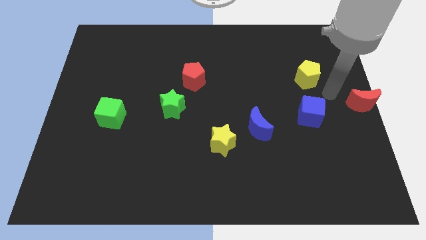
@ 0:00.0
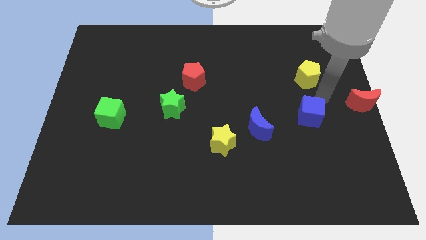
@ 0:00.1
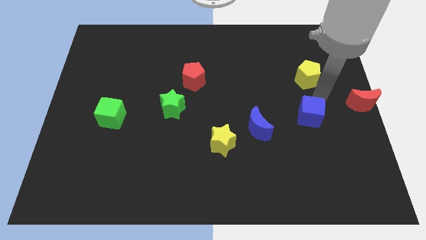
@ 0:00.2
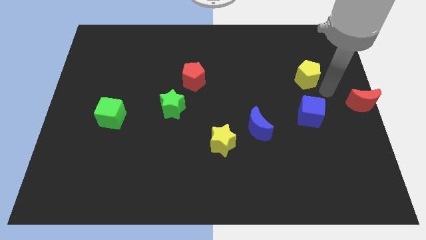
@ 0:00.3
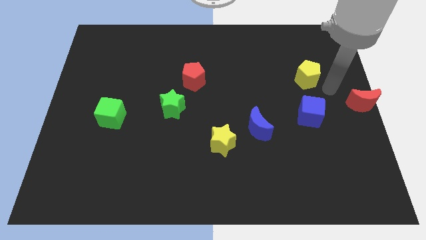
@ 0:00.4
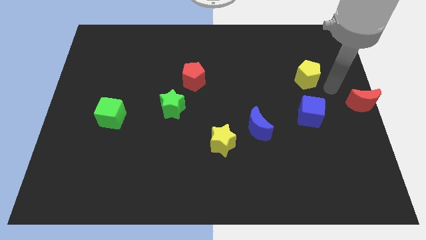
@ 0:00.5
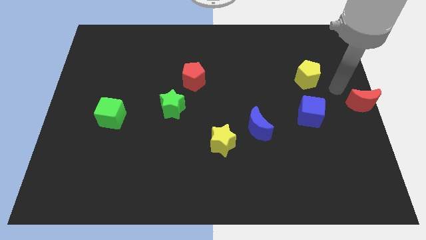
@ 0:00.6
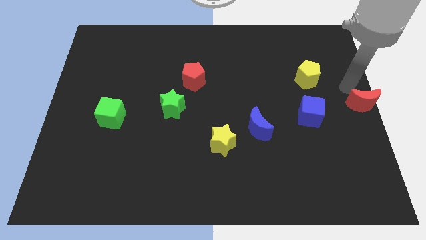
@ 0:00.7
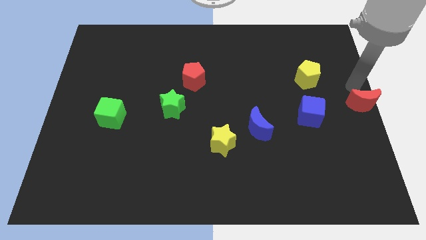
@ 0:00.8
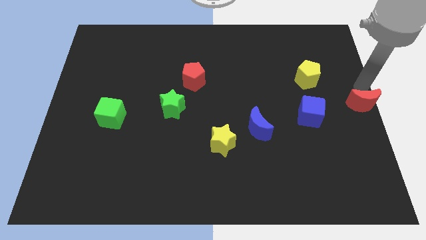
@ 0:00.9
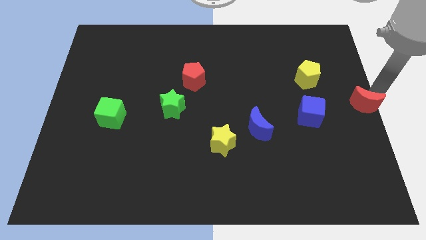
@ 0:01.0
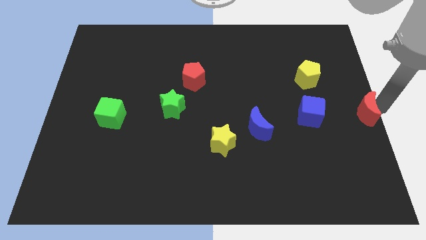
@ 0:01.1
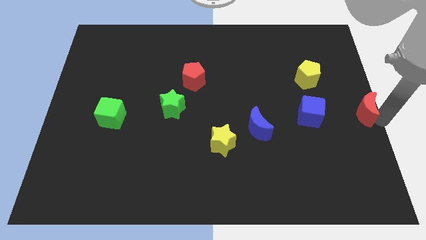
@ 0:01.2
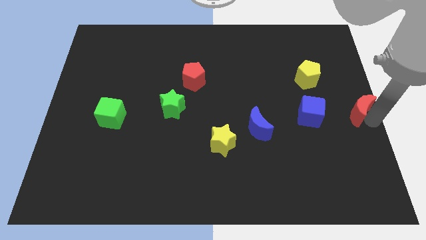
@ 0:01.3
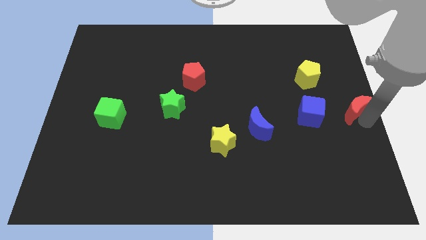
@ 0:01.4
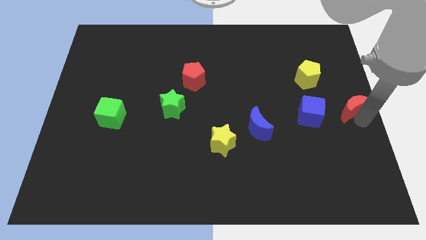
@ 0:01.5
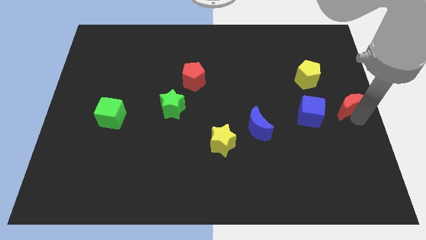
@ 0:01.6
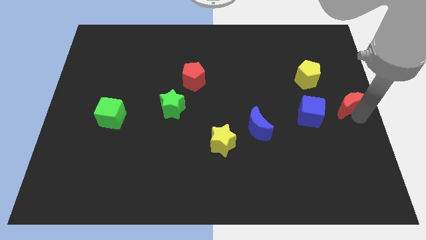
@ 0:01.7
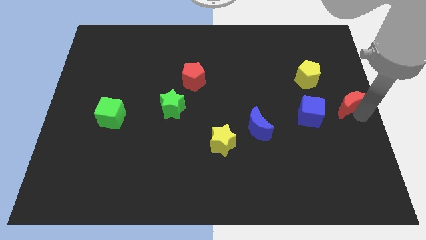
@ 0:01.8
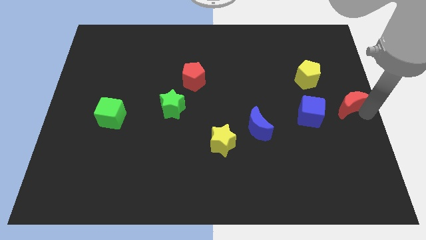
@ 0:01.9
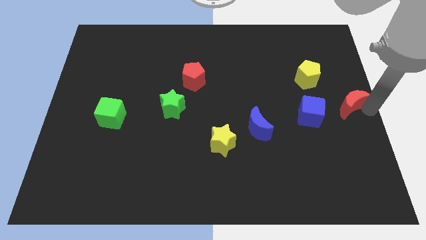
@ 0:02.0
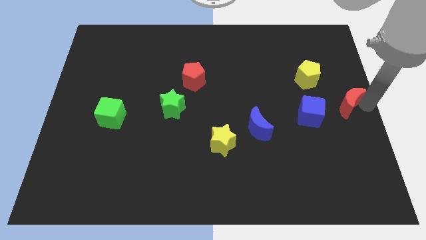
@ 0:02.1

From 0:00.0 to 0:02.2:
push red moon slightly up

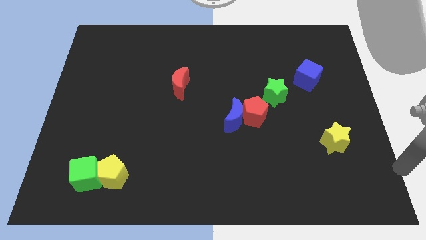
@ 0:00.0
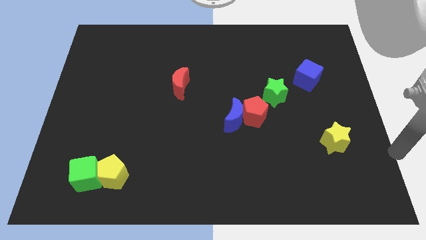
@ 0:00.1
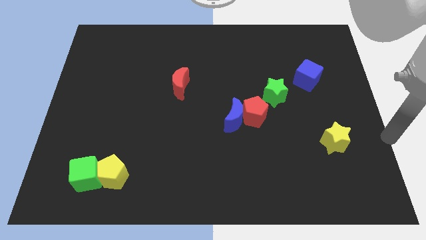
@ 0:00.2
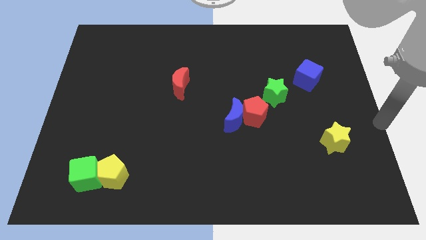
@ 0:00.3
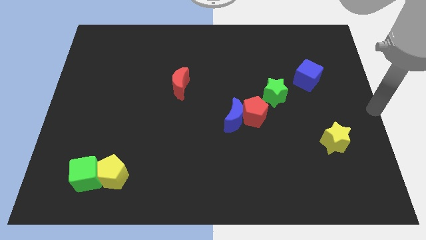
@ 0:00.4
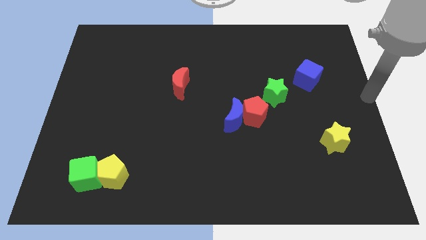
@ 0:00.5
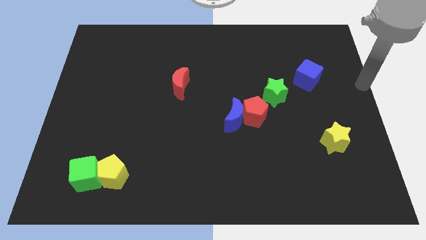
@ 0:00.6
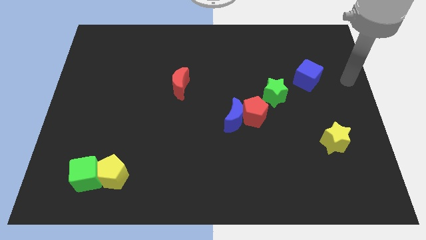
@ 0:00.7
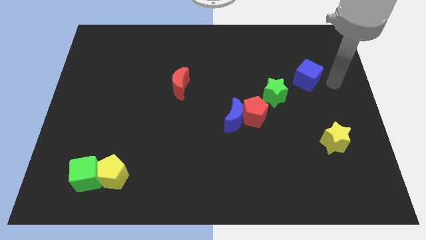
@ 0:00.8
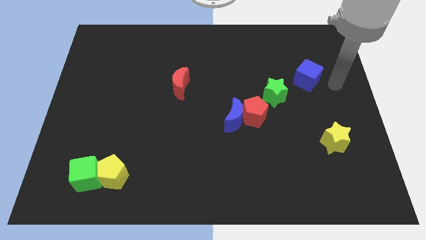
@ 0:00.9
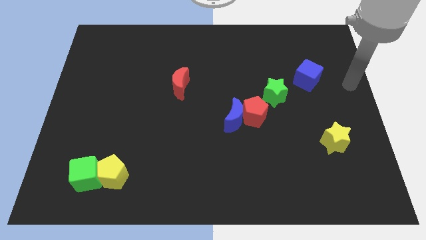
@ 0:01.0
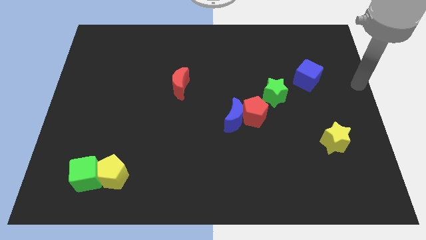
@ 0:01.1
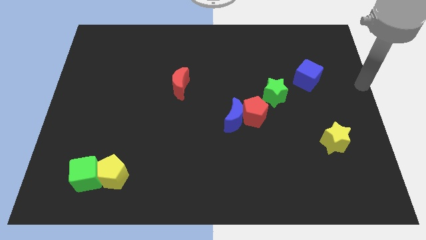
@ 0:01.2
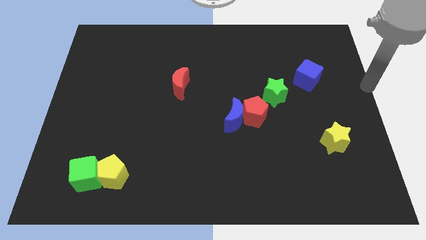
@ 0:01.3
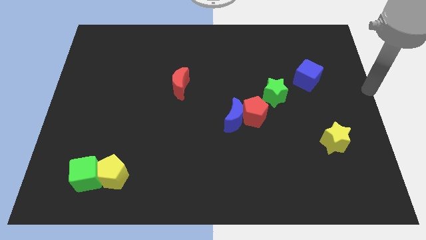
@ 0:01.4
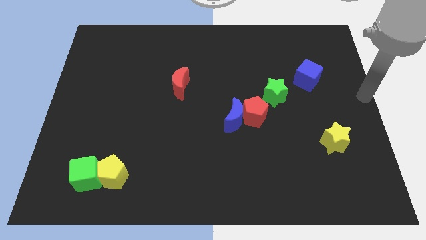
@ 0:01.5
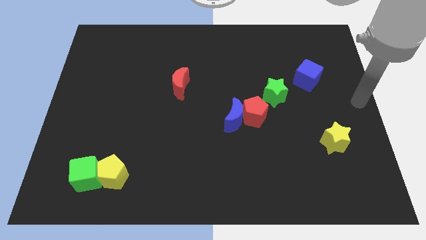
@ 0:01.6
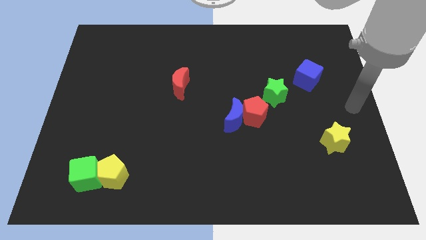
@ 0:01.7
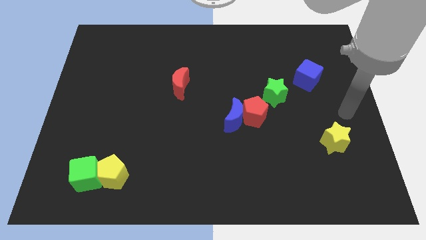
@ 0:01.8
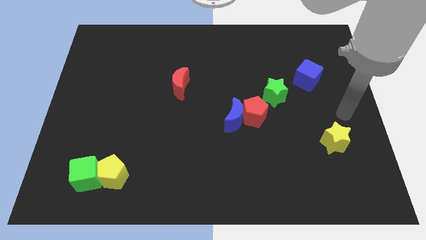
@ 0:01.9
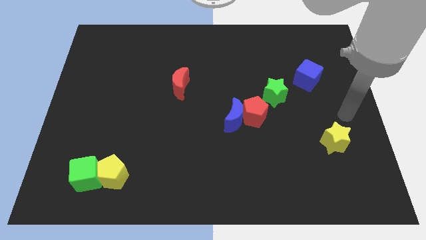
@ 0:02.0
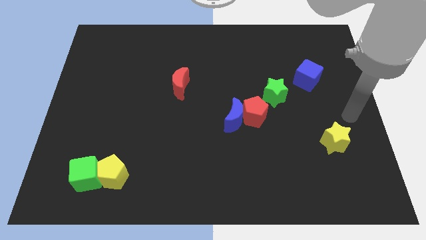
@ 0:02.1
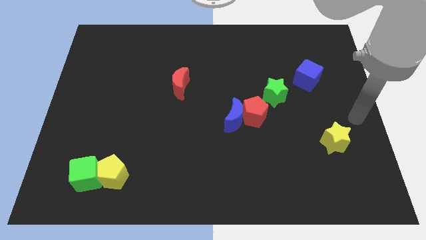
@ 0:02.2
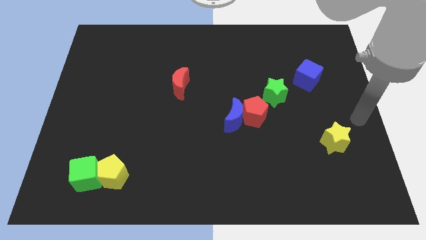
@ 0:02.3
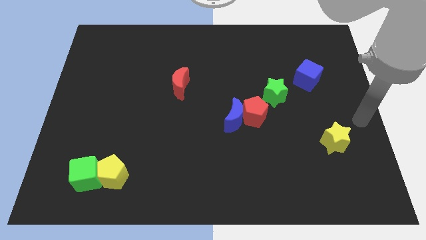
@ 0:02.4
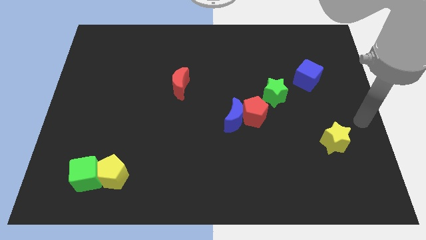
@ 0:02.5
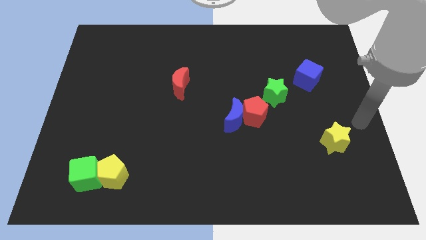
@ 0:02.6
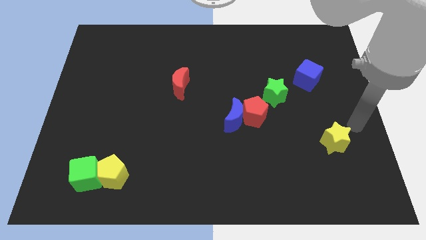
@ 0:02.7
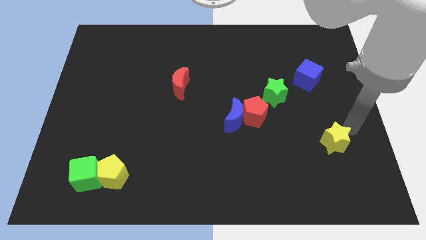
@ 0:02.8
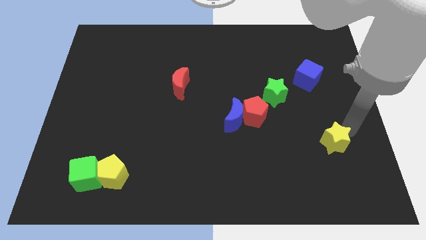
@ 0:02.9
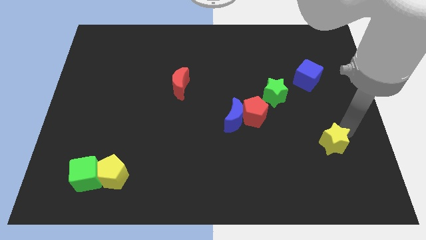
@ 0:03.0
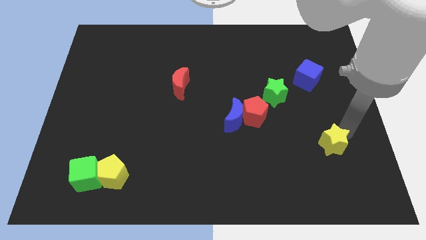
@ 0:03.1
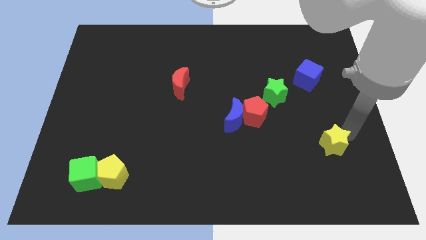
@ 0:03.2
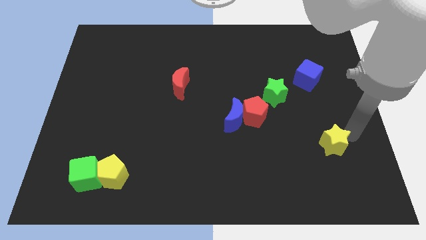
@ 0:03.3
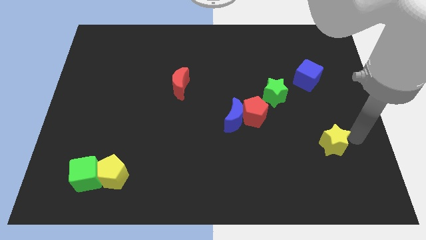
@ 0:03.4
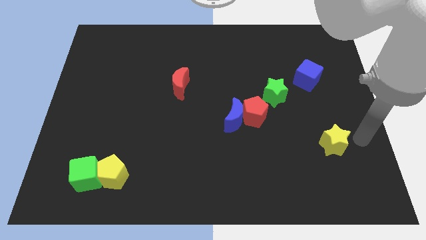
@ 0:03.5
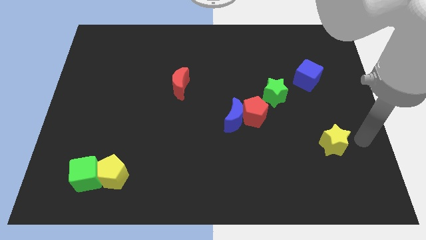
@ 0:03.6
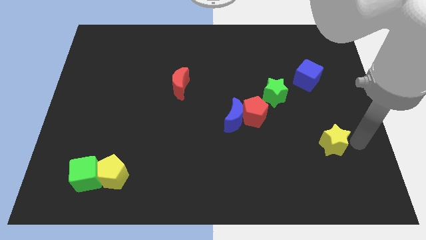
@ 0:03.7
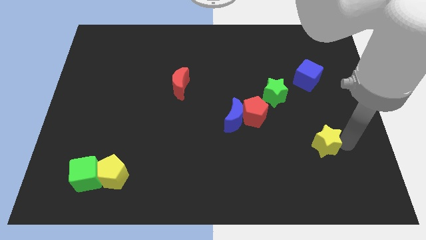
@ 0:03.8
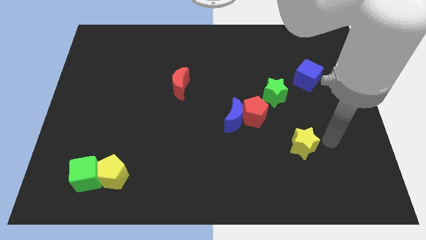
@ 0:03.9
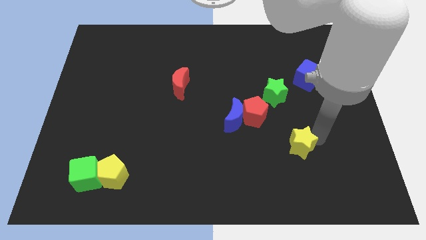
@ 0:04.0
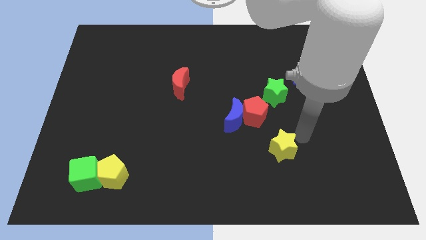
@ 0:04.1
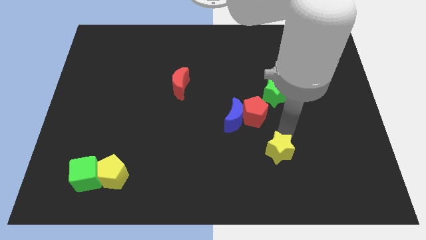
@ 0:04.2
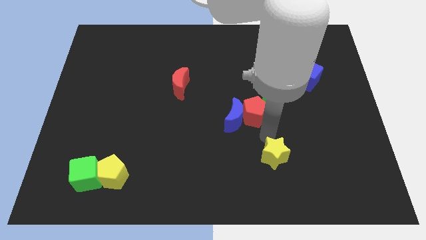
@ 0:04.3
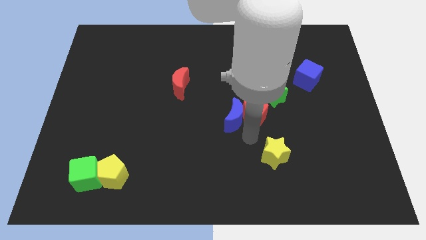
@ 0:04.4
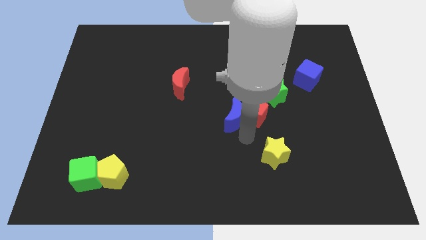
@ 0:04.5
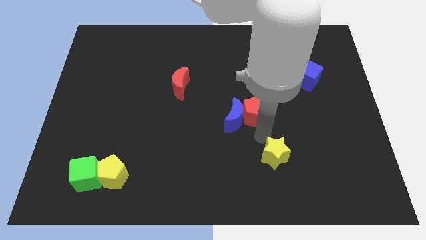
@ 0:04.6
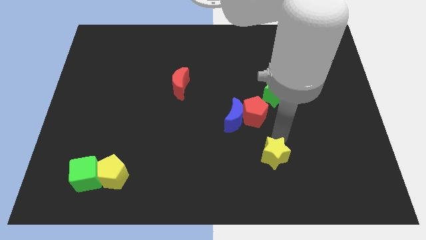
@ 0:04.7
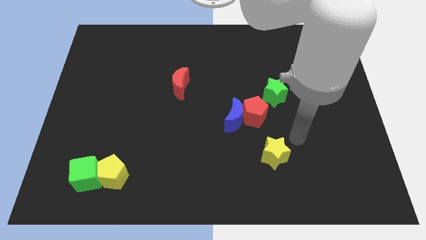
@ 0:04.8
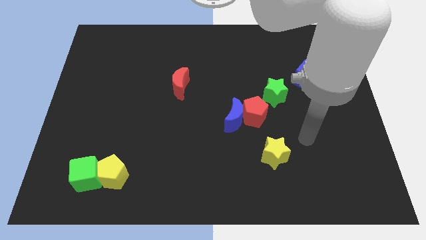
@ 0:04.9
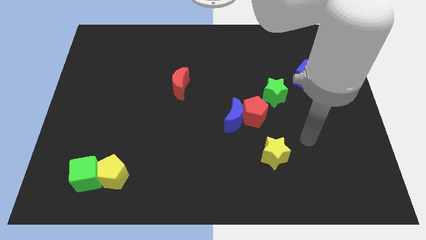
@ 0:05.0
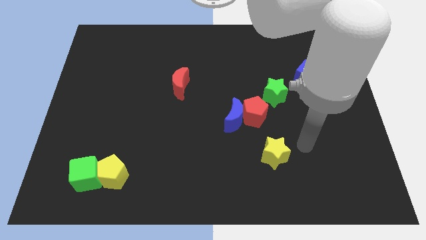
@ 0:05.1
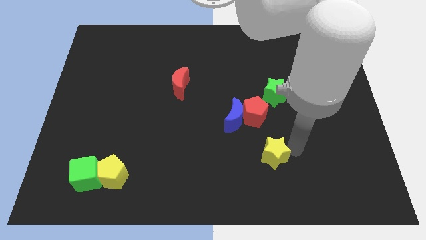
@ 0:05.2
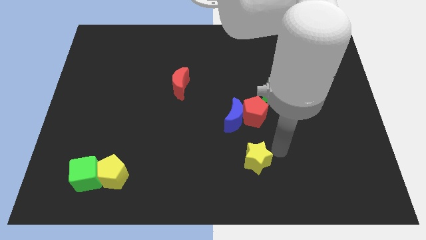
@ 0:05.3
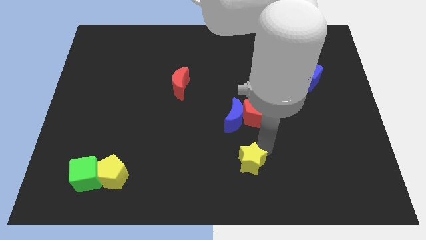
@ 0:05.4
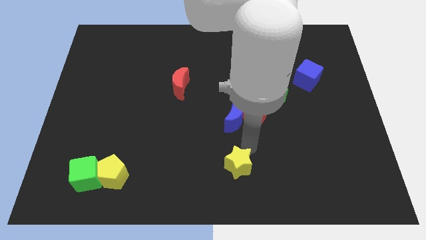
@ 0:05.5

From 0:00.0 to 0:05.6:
move the yellow star below the blue moon

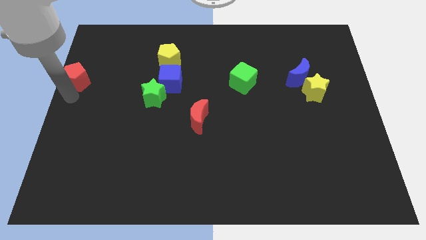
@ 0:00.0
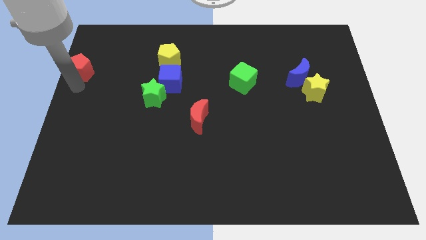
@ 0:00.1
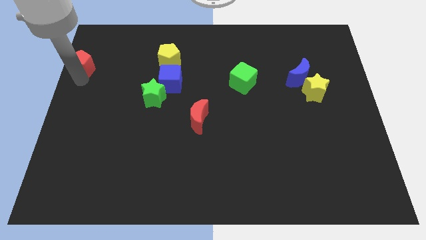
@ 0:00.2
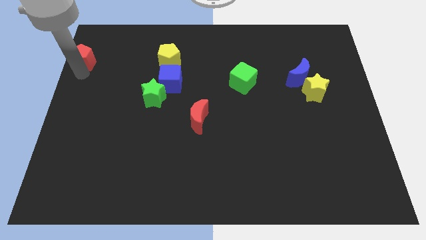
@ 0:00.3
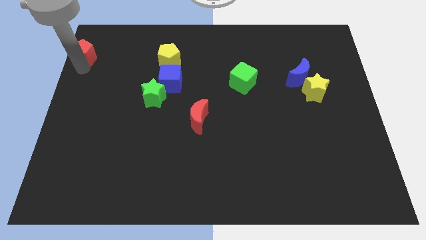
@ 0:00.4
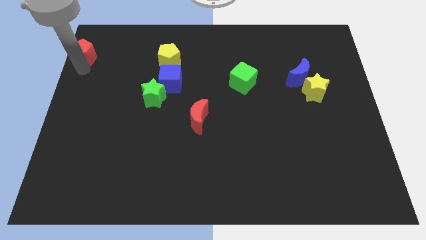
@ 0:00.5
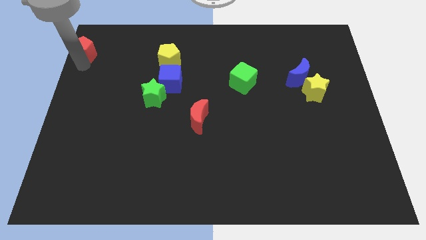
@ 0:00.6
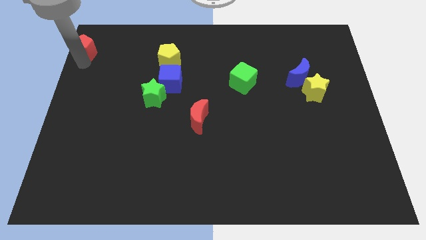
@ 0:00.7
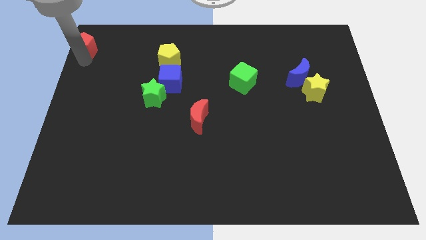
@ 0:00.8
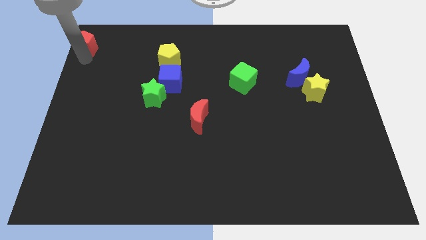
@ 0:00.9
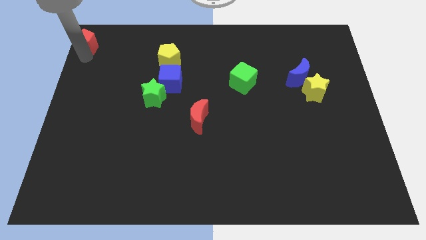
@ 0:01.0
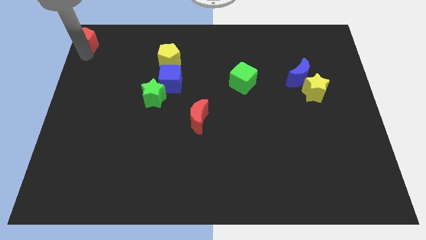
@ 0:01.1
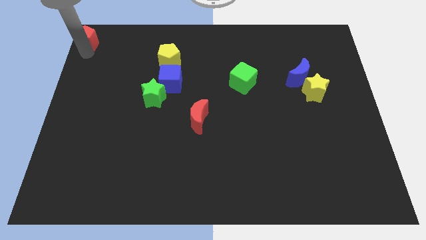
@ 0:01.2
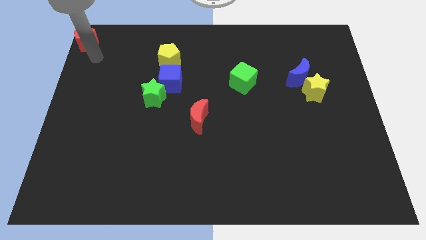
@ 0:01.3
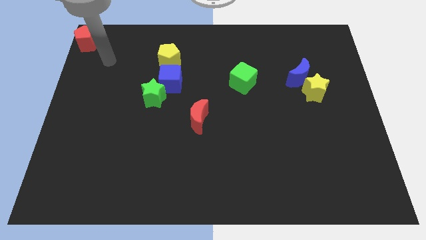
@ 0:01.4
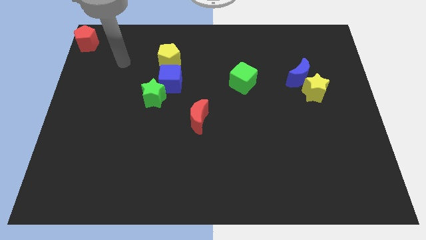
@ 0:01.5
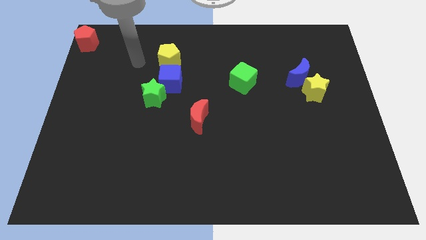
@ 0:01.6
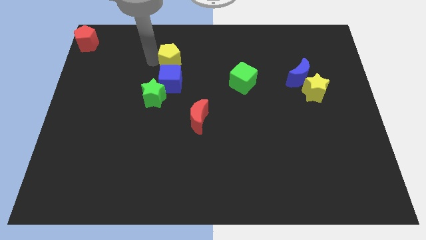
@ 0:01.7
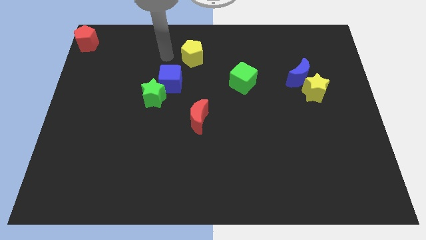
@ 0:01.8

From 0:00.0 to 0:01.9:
push the red pentagon towards the top left corner of the board
